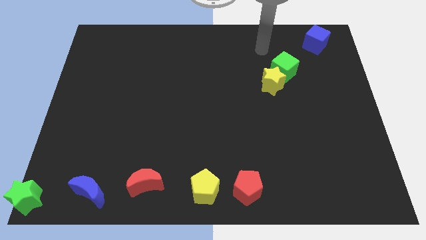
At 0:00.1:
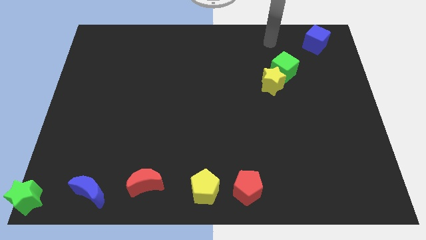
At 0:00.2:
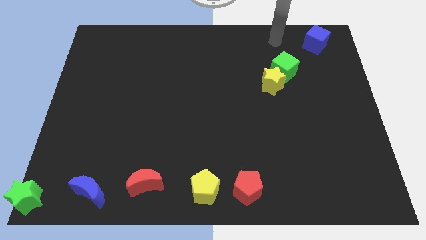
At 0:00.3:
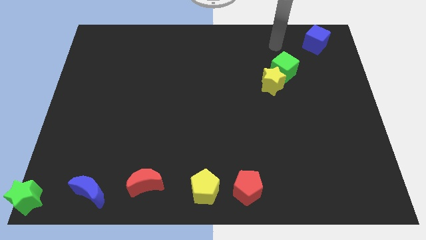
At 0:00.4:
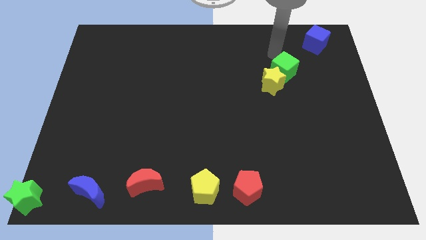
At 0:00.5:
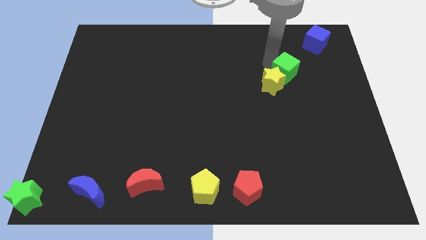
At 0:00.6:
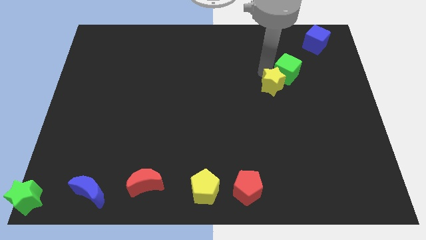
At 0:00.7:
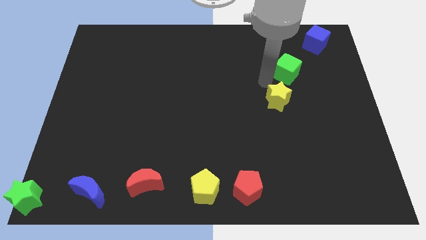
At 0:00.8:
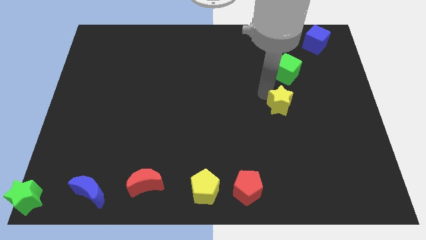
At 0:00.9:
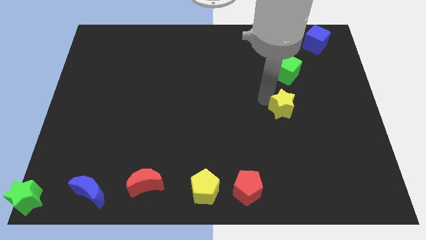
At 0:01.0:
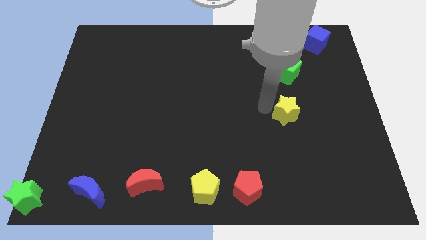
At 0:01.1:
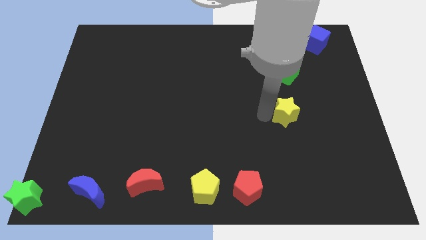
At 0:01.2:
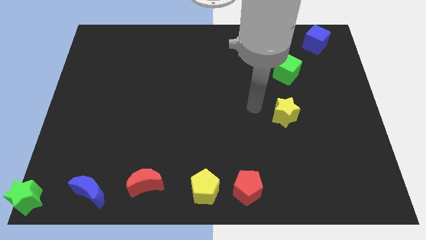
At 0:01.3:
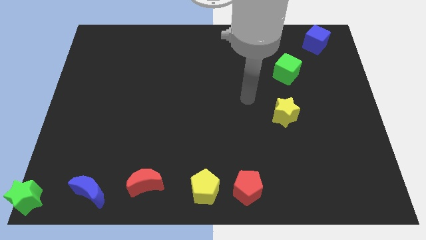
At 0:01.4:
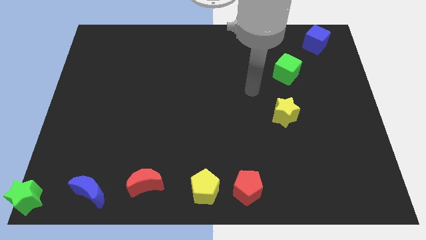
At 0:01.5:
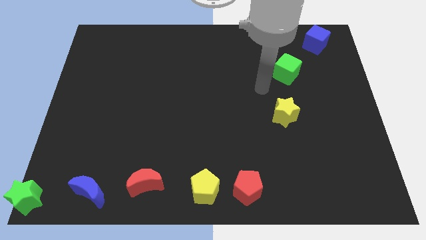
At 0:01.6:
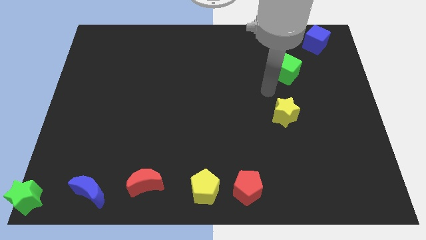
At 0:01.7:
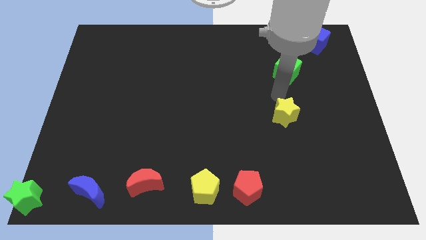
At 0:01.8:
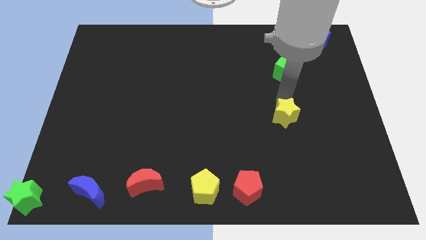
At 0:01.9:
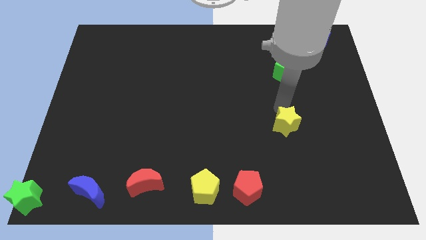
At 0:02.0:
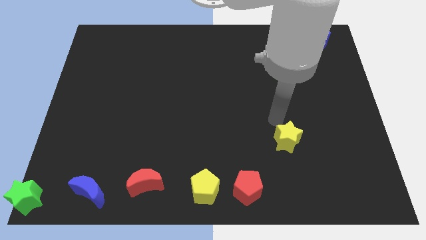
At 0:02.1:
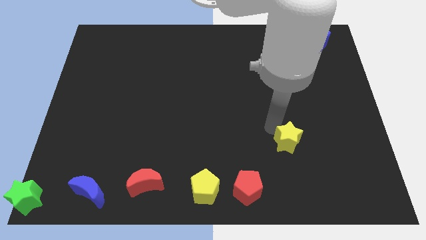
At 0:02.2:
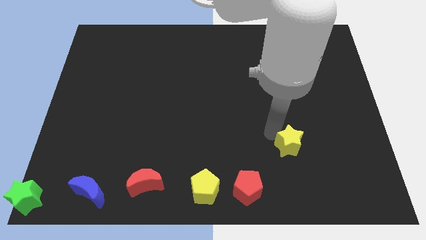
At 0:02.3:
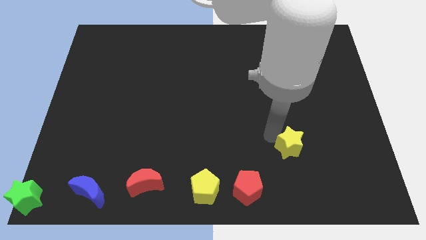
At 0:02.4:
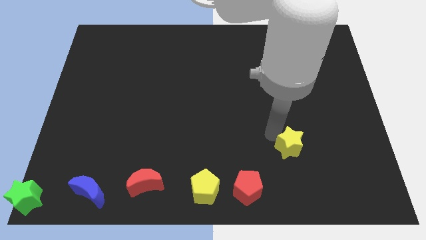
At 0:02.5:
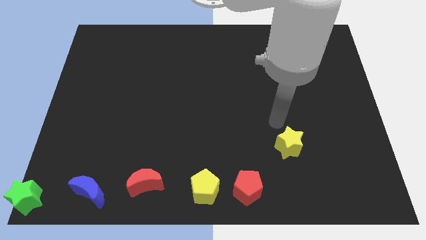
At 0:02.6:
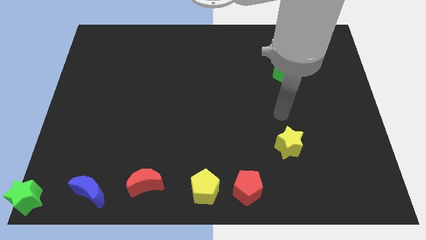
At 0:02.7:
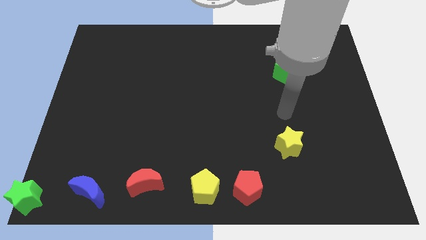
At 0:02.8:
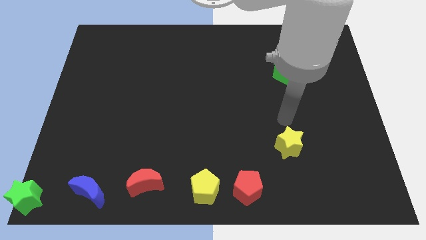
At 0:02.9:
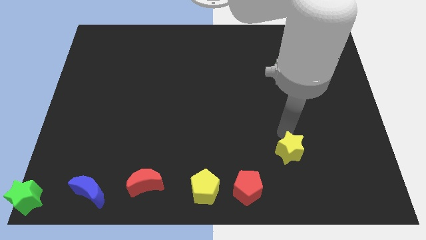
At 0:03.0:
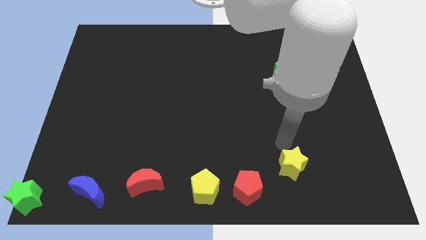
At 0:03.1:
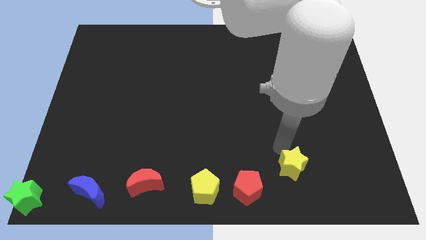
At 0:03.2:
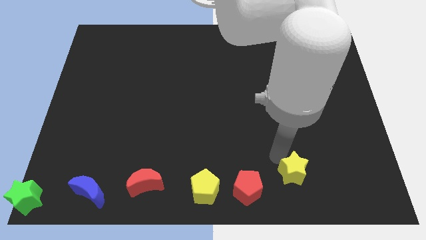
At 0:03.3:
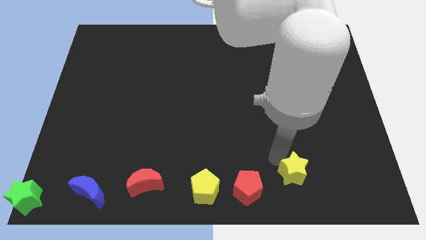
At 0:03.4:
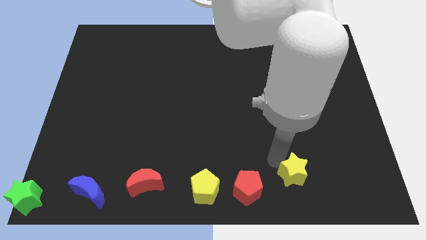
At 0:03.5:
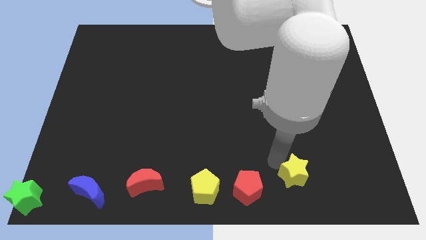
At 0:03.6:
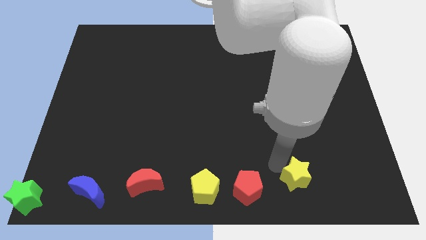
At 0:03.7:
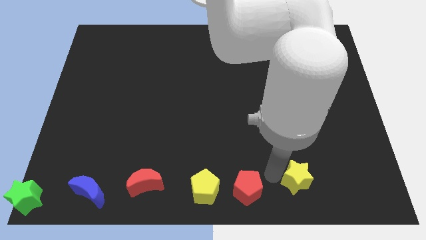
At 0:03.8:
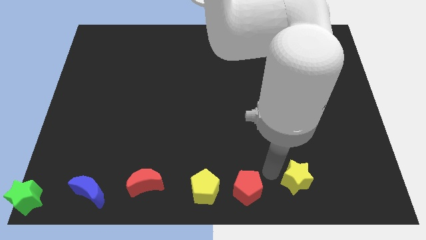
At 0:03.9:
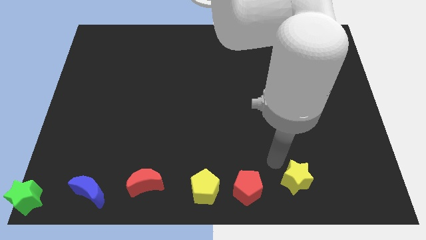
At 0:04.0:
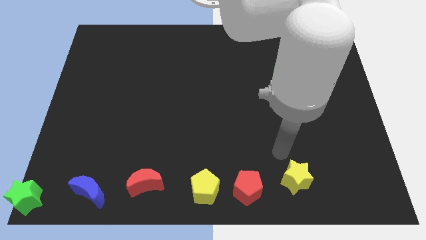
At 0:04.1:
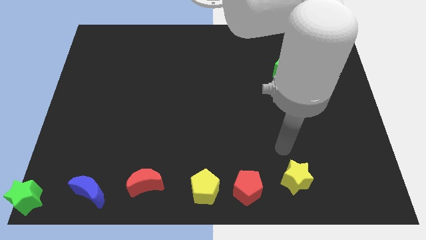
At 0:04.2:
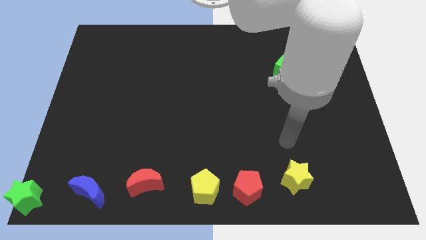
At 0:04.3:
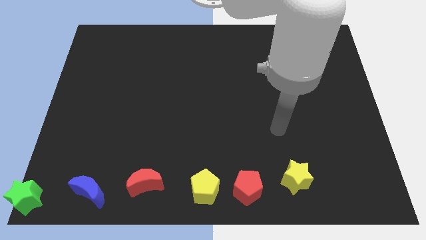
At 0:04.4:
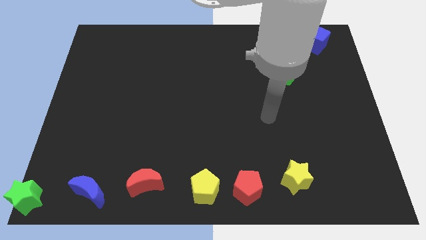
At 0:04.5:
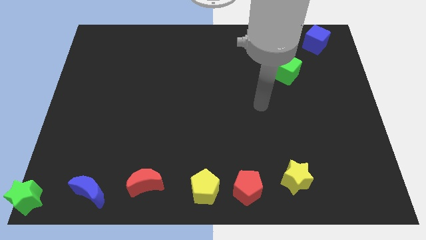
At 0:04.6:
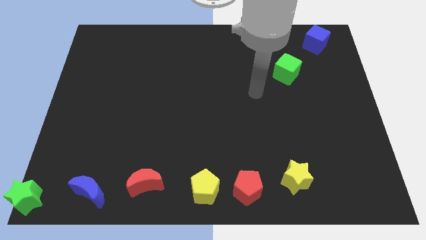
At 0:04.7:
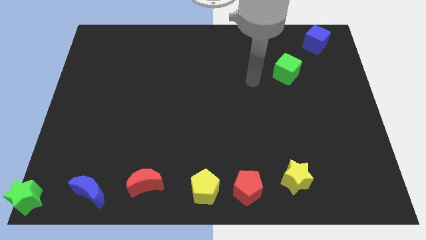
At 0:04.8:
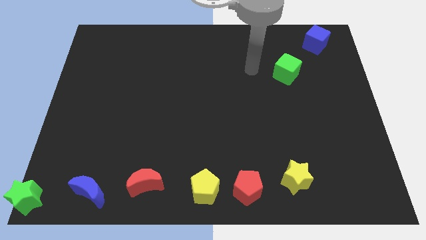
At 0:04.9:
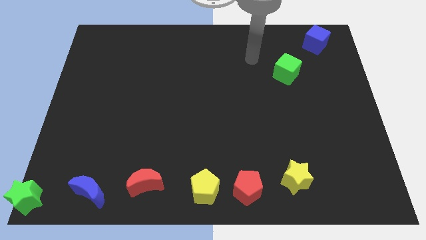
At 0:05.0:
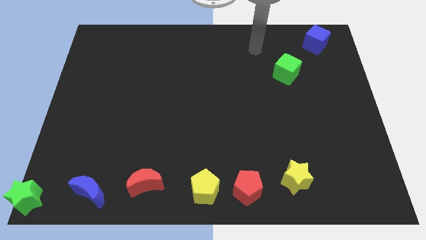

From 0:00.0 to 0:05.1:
move yellow star to the right of red pentagon

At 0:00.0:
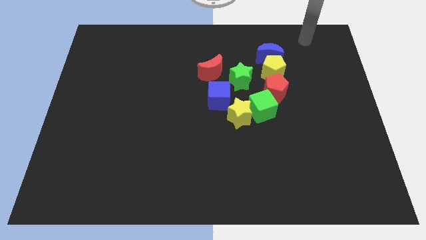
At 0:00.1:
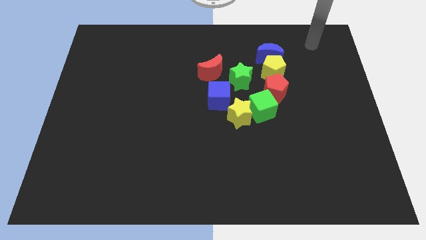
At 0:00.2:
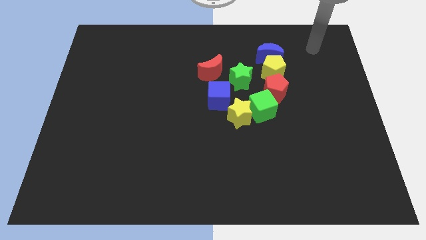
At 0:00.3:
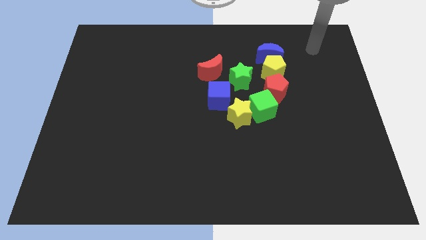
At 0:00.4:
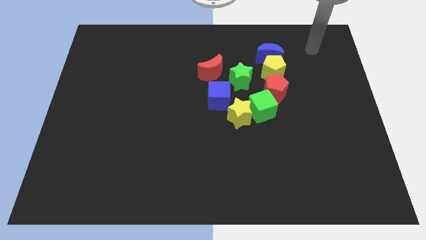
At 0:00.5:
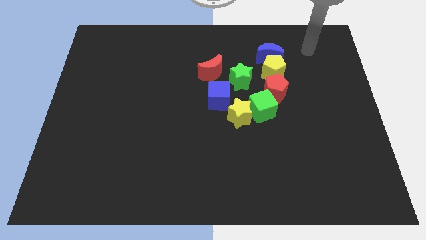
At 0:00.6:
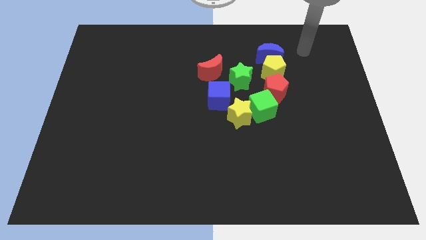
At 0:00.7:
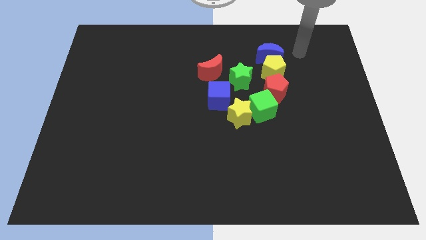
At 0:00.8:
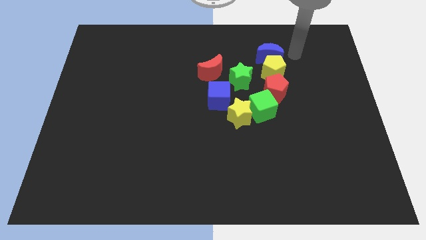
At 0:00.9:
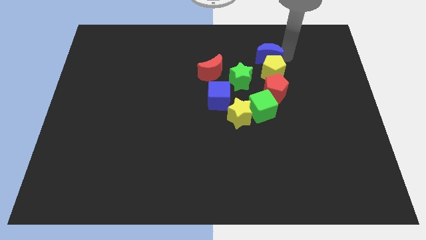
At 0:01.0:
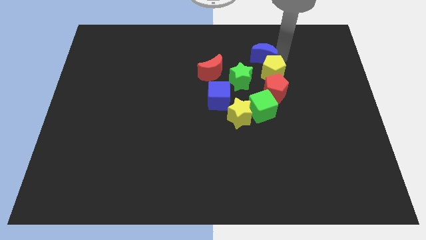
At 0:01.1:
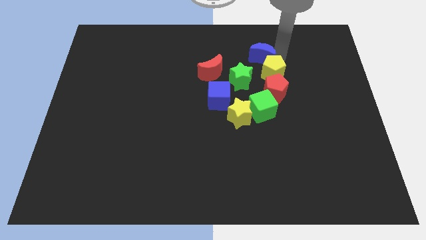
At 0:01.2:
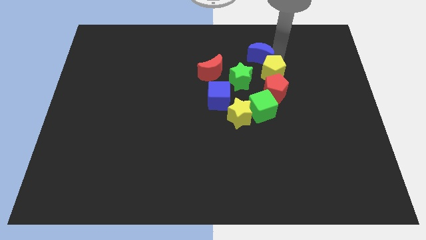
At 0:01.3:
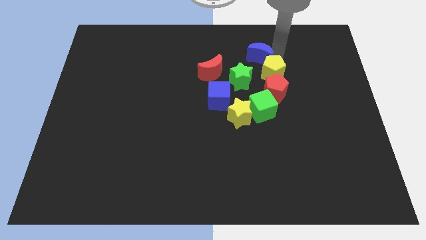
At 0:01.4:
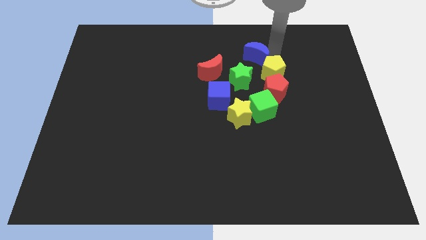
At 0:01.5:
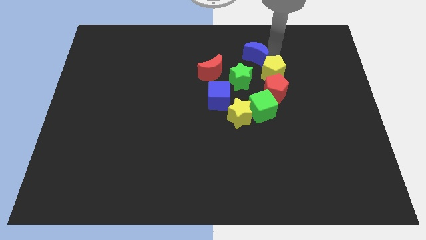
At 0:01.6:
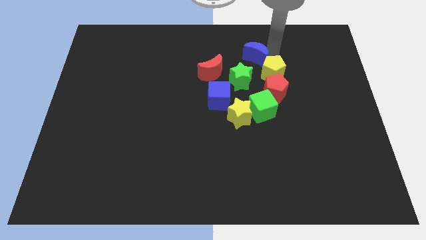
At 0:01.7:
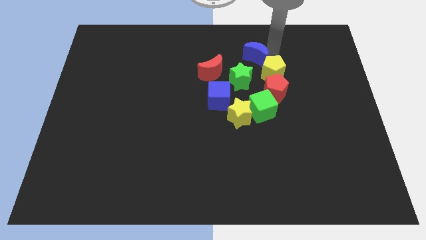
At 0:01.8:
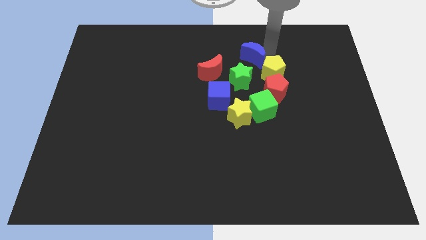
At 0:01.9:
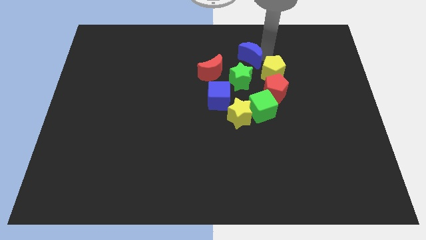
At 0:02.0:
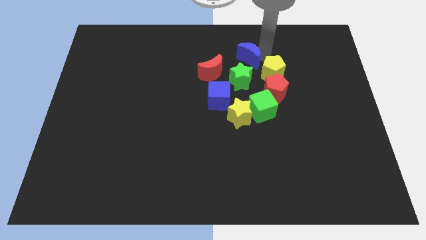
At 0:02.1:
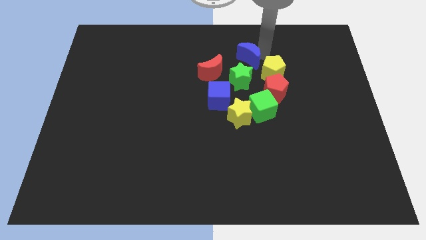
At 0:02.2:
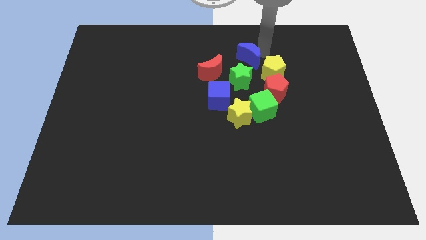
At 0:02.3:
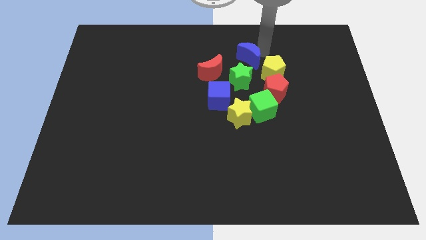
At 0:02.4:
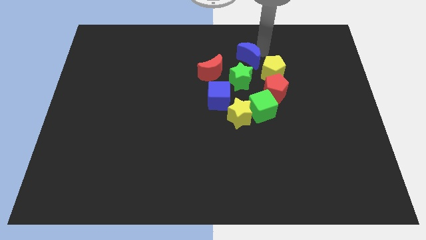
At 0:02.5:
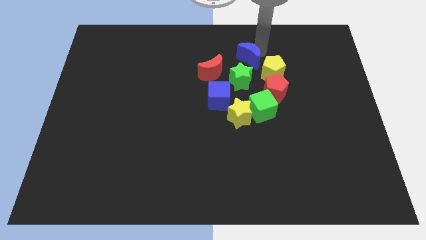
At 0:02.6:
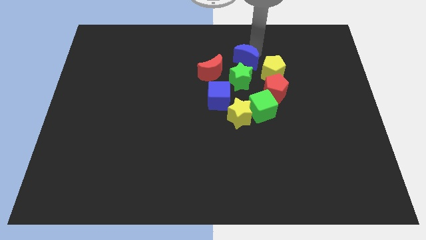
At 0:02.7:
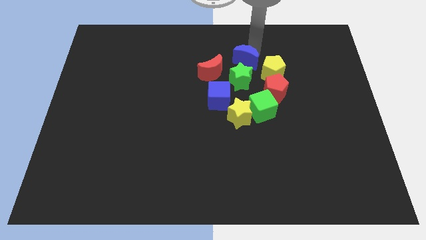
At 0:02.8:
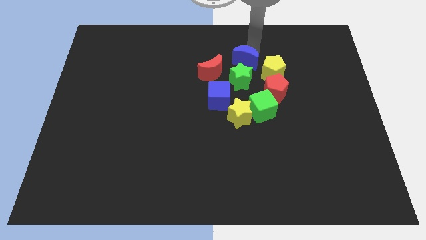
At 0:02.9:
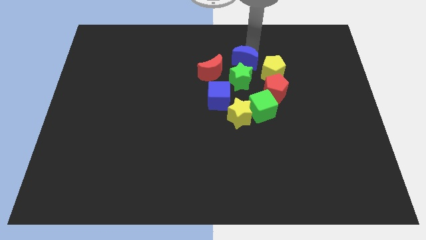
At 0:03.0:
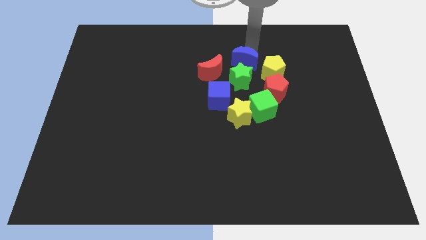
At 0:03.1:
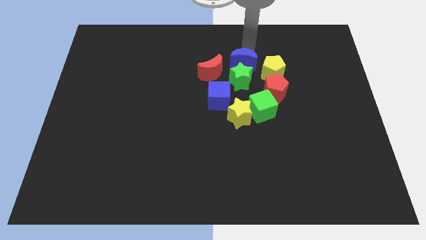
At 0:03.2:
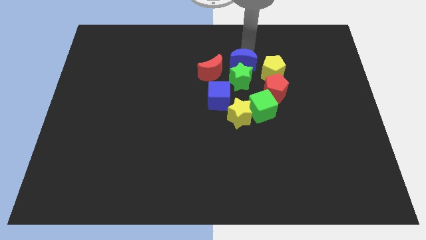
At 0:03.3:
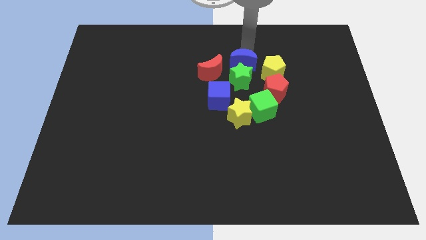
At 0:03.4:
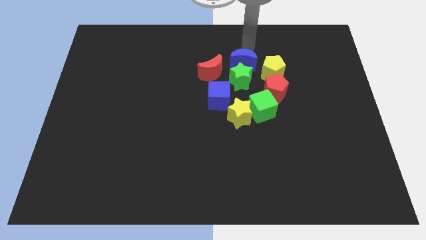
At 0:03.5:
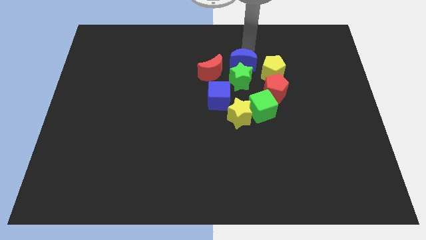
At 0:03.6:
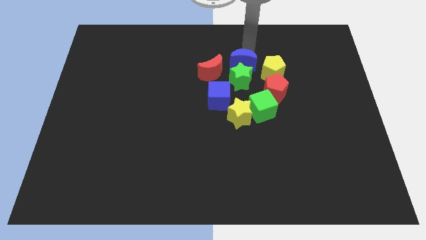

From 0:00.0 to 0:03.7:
push the blue moon above the green star

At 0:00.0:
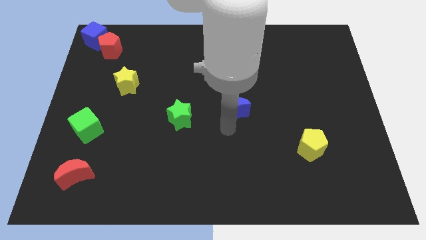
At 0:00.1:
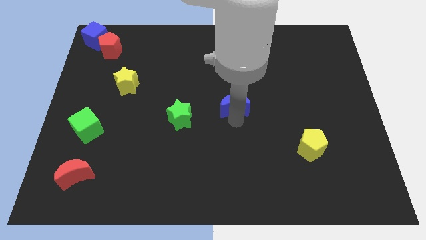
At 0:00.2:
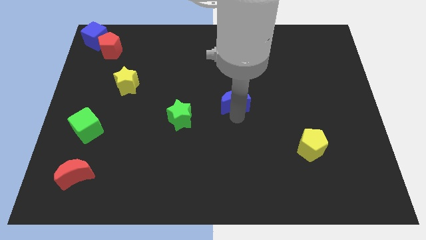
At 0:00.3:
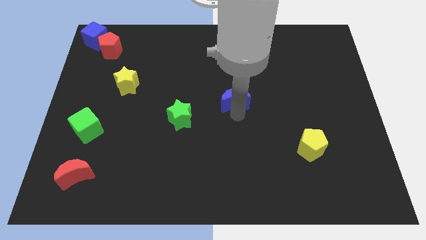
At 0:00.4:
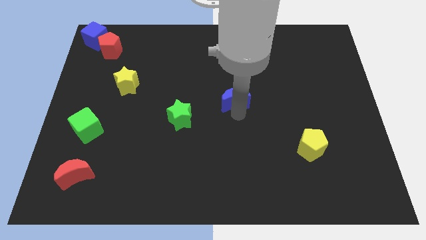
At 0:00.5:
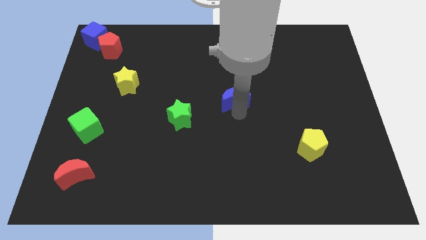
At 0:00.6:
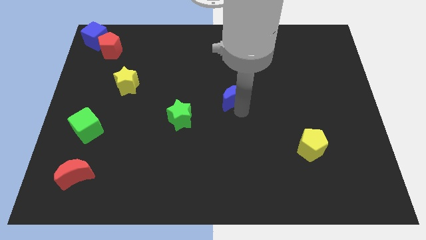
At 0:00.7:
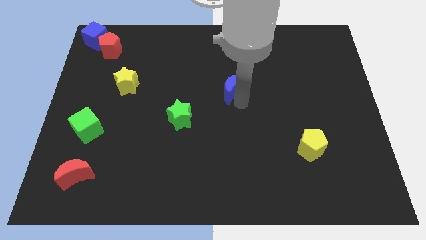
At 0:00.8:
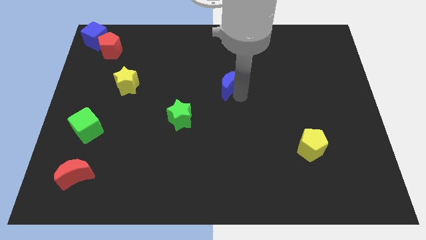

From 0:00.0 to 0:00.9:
move the blue crescent to the center of the board
